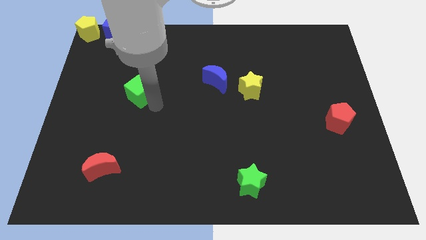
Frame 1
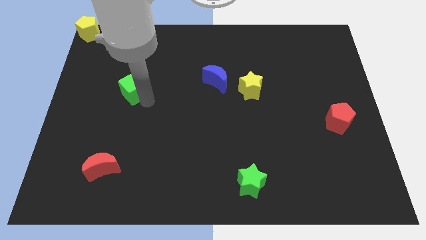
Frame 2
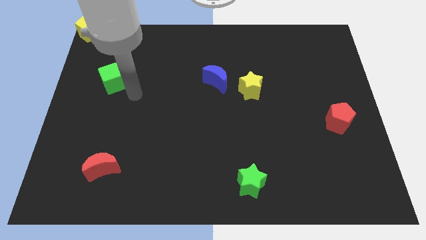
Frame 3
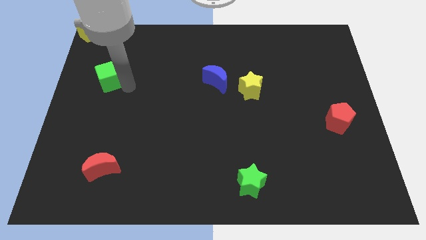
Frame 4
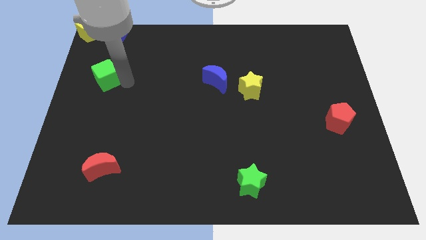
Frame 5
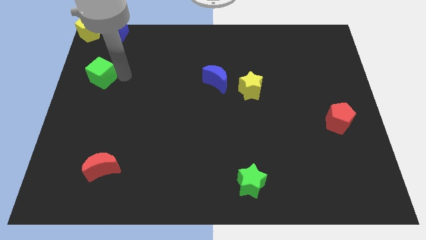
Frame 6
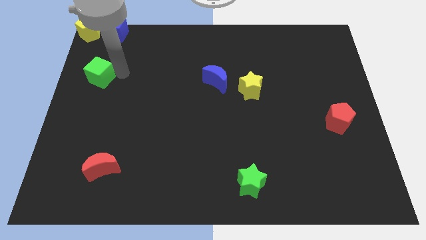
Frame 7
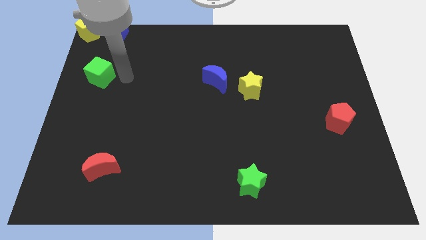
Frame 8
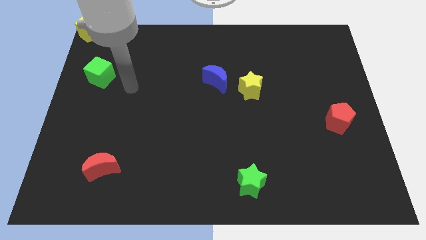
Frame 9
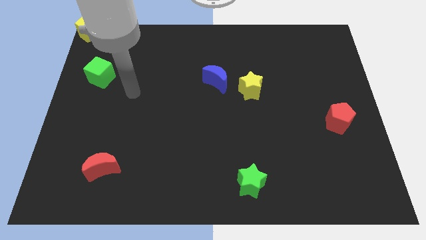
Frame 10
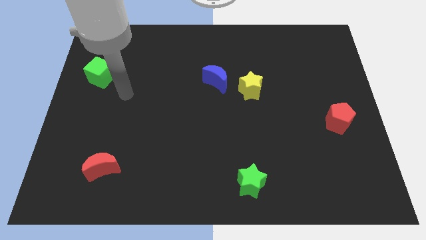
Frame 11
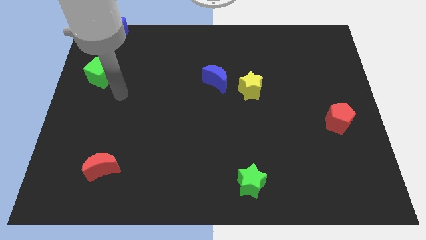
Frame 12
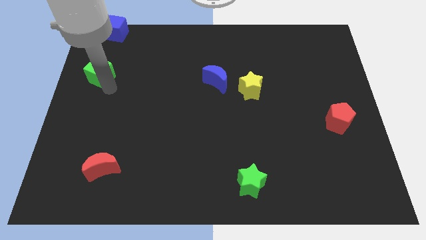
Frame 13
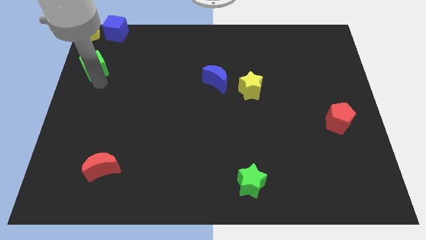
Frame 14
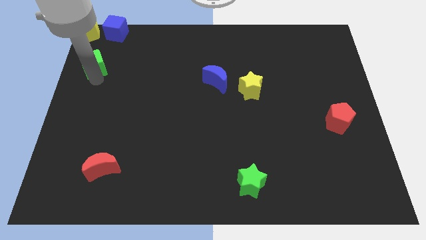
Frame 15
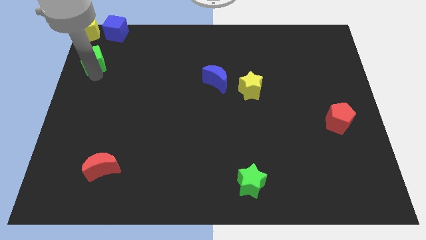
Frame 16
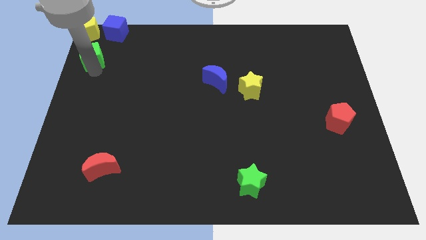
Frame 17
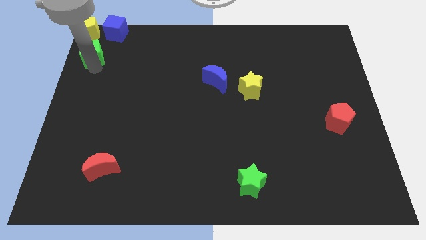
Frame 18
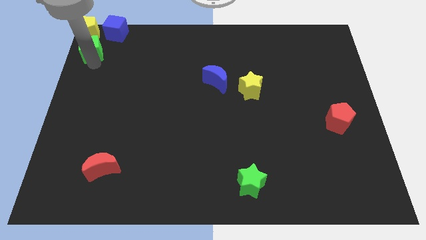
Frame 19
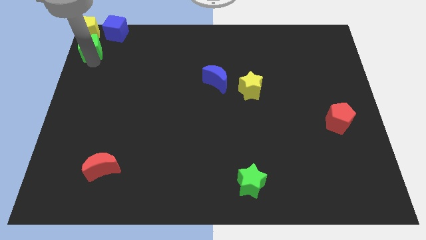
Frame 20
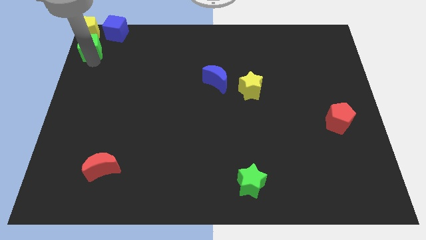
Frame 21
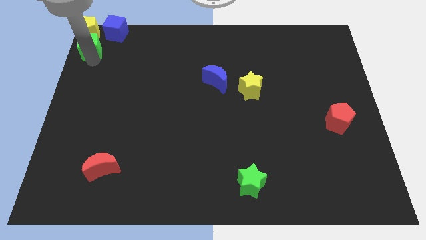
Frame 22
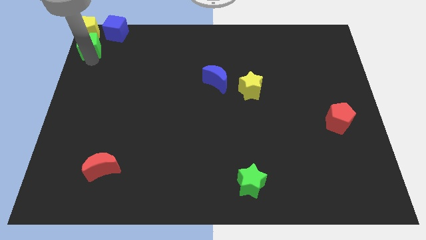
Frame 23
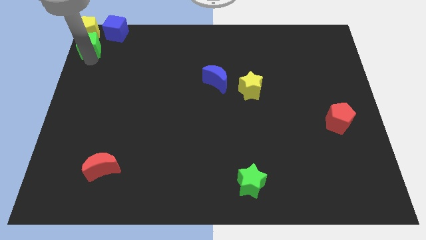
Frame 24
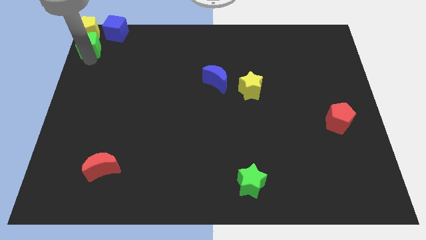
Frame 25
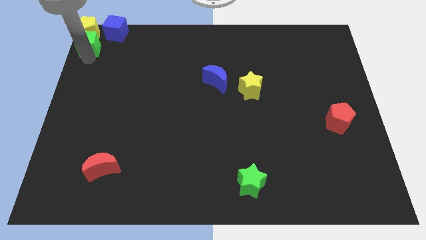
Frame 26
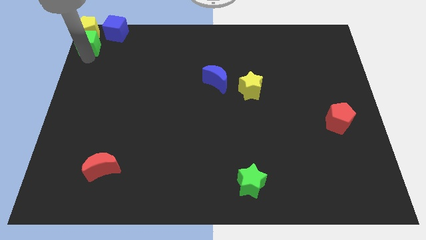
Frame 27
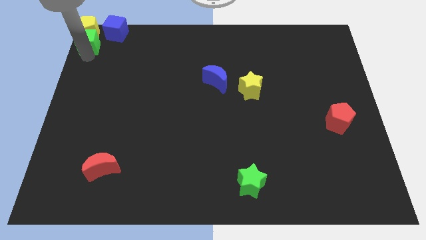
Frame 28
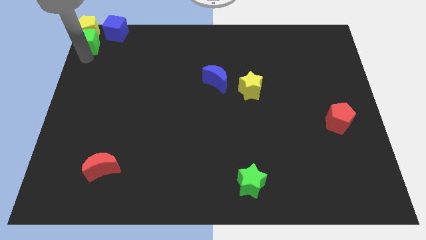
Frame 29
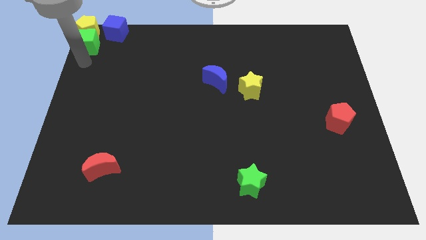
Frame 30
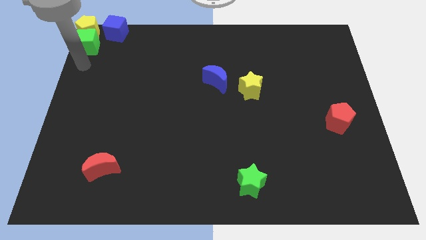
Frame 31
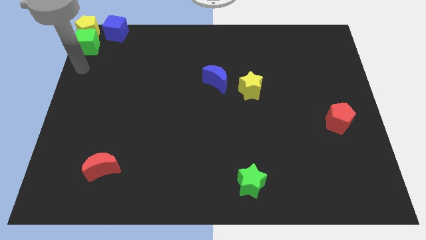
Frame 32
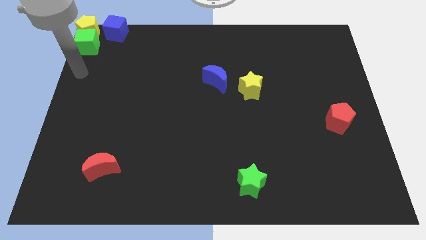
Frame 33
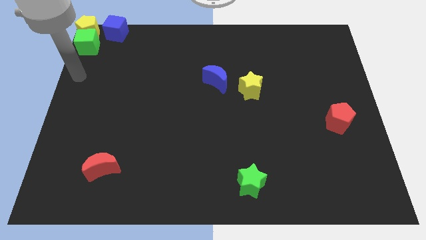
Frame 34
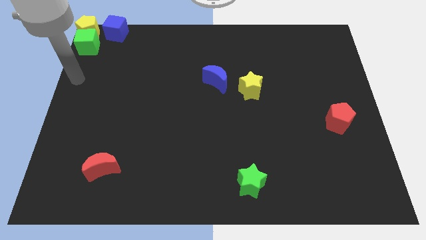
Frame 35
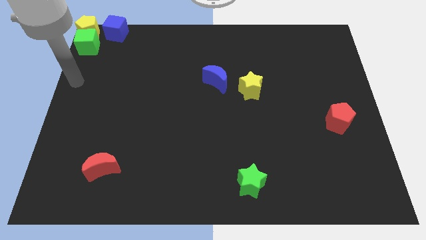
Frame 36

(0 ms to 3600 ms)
slide the green cube diagonally bottom left to the blue cube

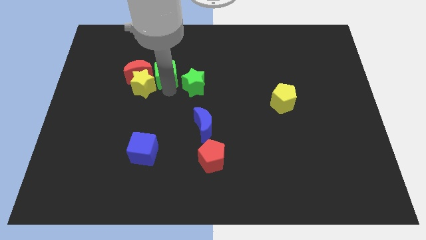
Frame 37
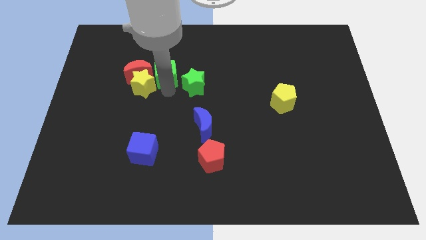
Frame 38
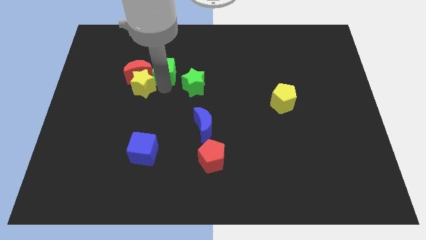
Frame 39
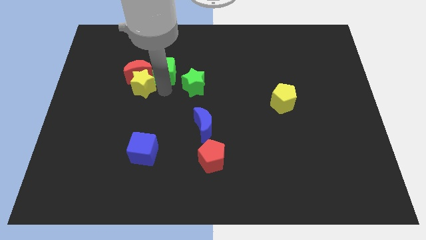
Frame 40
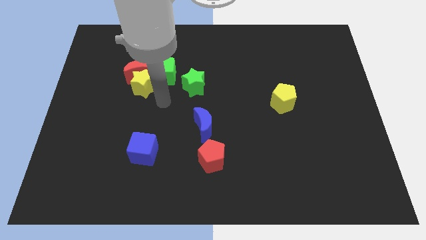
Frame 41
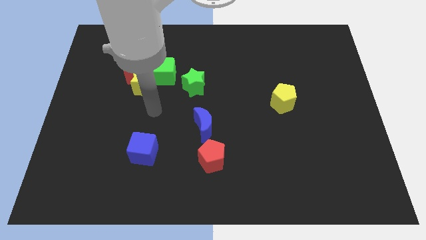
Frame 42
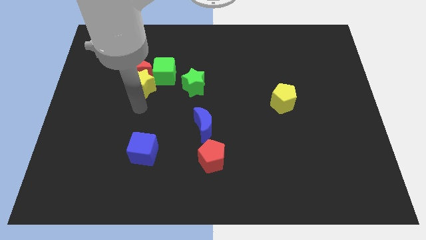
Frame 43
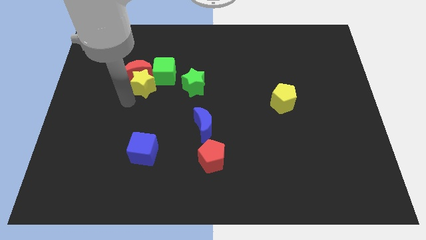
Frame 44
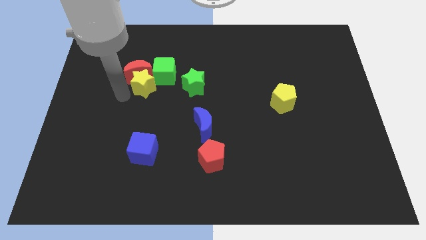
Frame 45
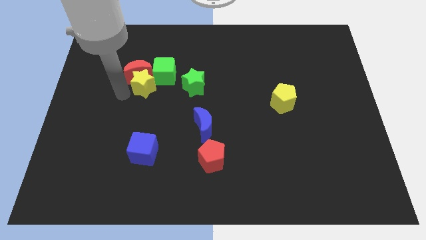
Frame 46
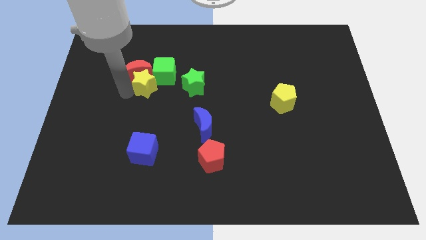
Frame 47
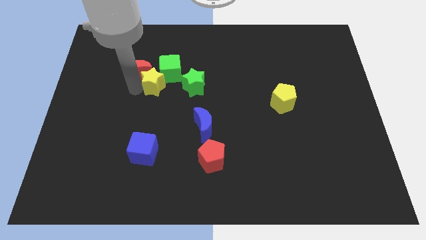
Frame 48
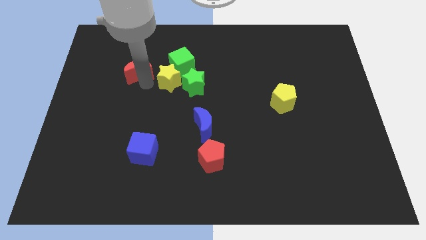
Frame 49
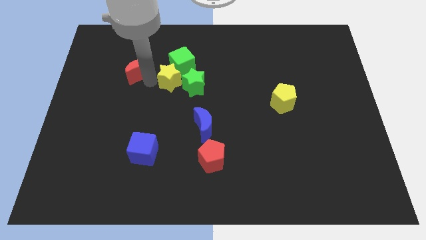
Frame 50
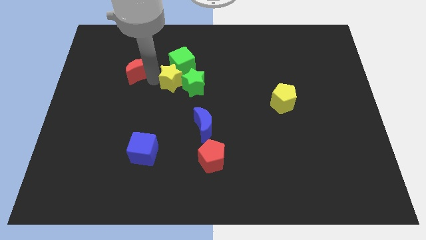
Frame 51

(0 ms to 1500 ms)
push the green cube with the yellow sta towards the top centre

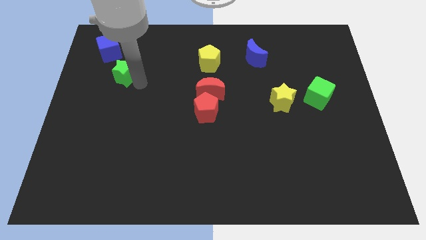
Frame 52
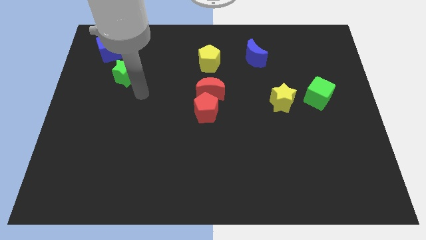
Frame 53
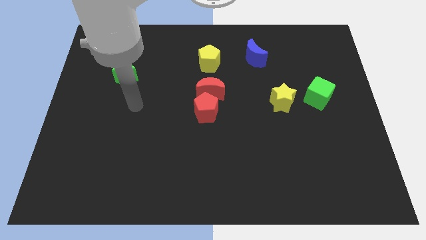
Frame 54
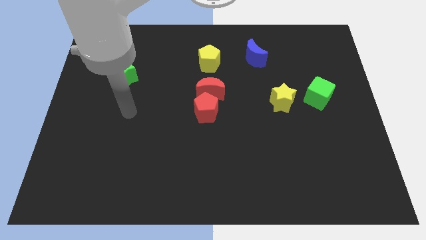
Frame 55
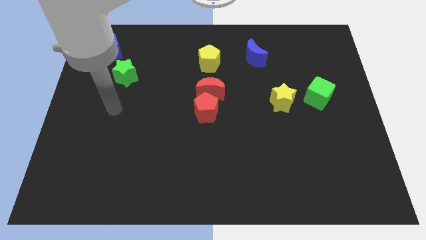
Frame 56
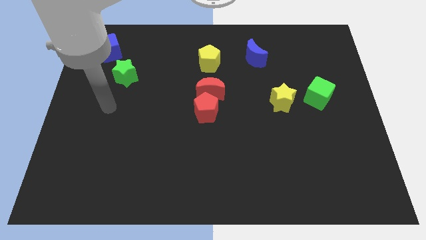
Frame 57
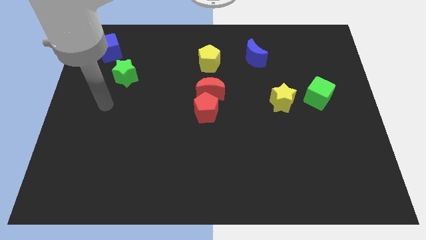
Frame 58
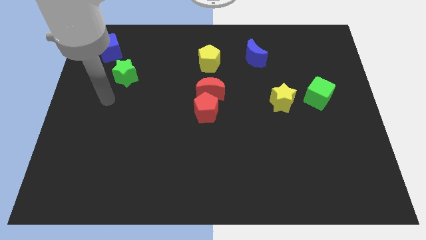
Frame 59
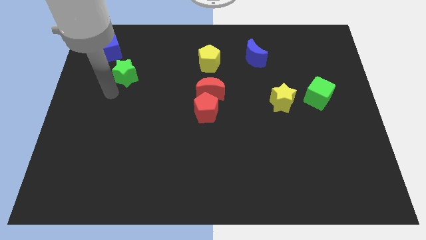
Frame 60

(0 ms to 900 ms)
place the arm left to the green star

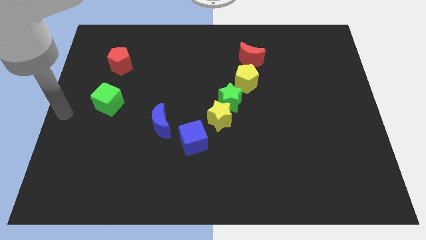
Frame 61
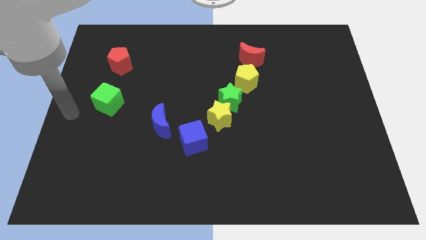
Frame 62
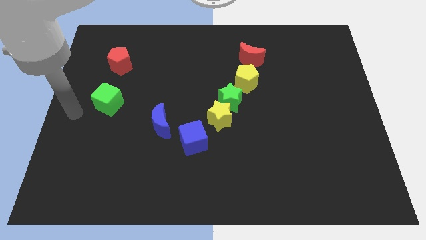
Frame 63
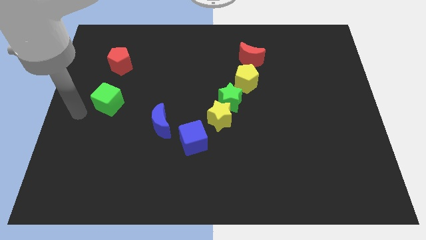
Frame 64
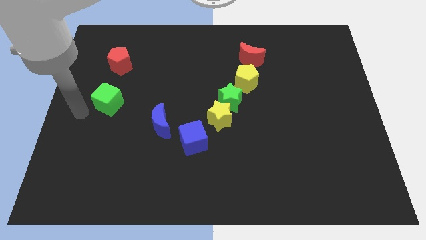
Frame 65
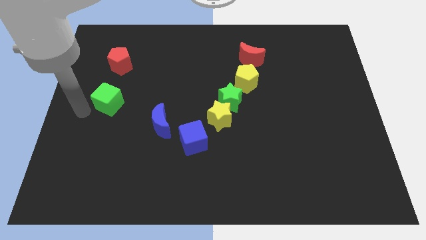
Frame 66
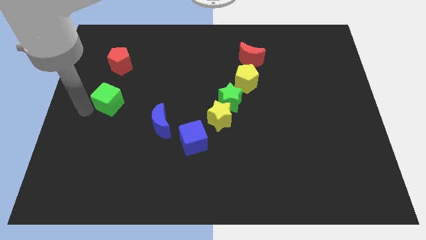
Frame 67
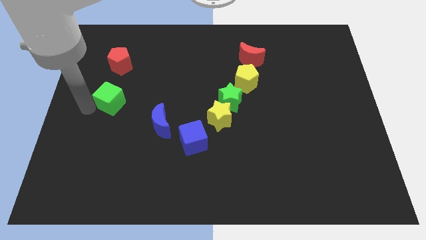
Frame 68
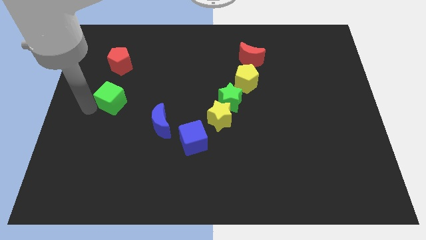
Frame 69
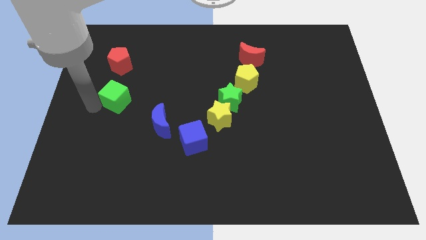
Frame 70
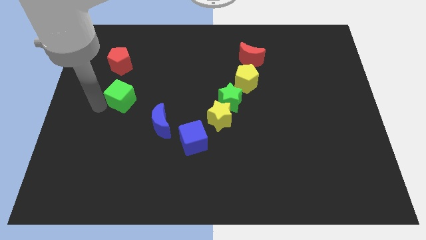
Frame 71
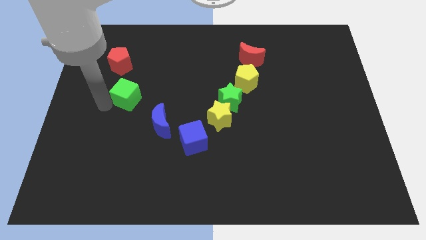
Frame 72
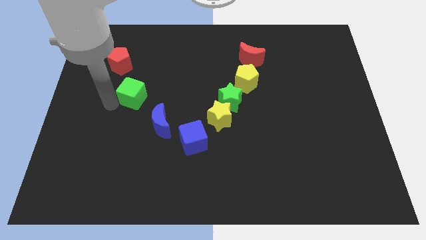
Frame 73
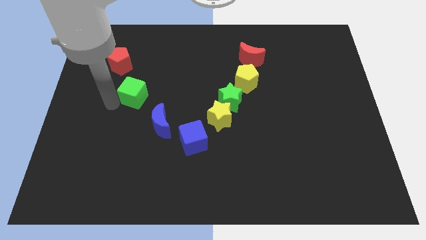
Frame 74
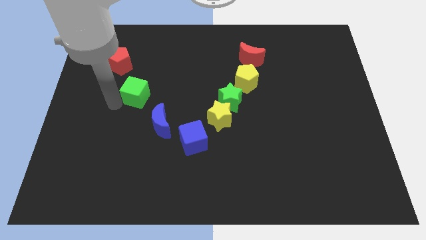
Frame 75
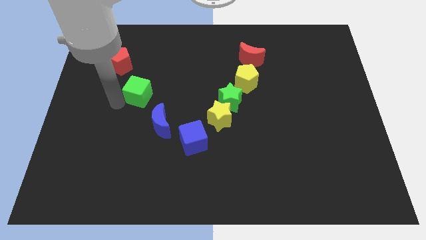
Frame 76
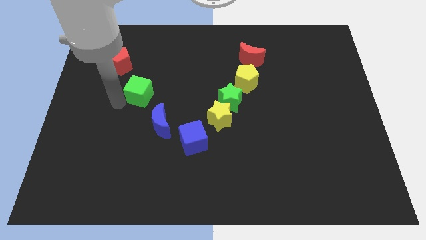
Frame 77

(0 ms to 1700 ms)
put the green cube in between the blue moon and red pentagon

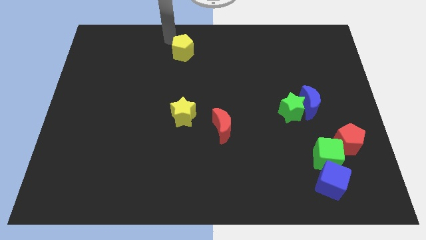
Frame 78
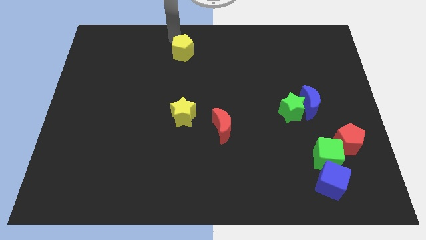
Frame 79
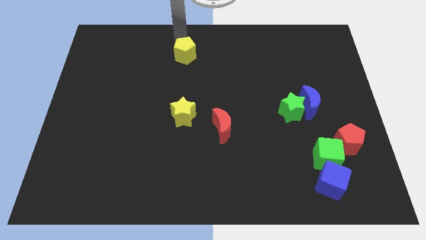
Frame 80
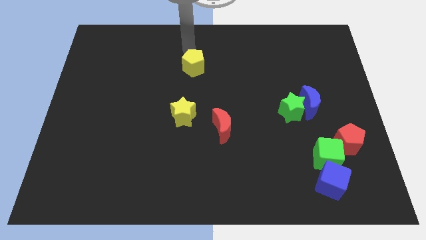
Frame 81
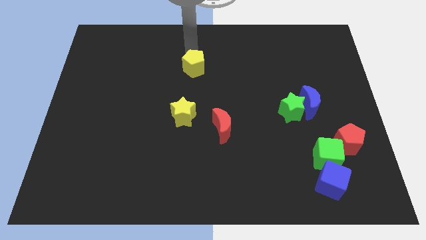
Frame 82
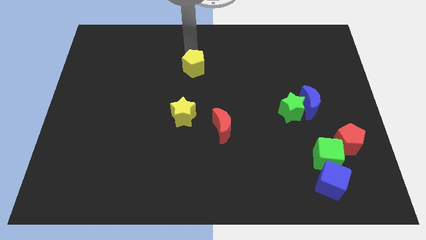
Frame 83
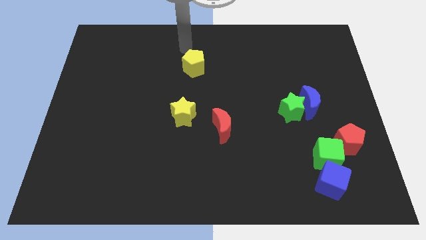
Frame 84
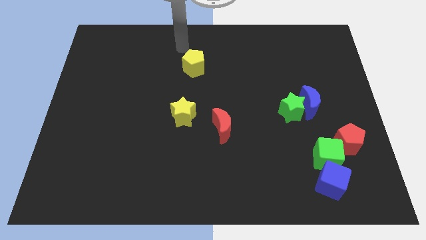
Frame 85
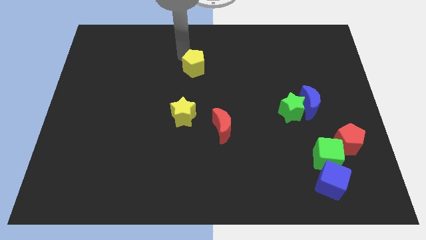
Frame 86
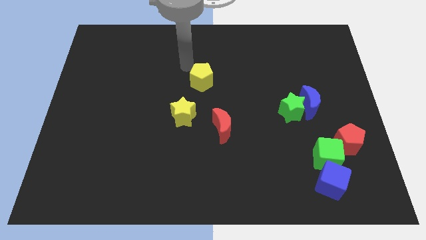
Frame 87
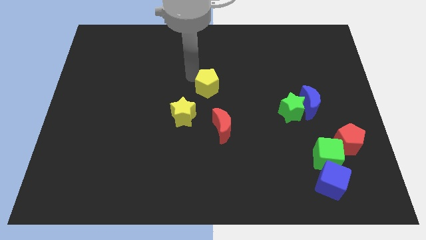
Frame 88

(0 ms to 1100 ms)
move the yellow pentagon to the center of the board

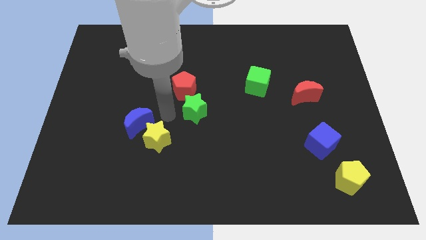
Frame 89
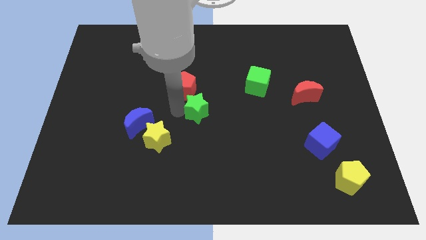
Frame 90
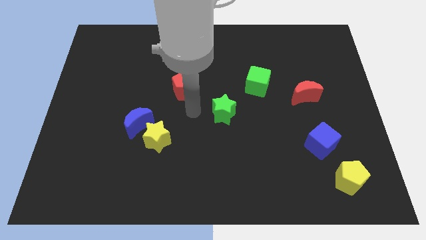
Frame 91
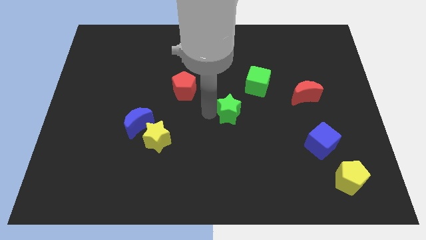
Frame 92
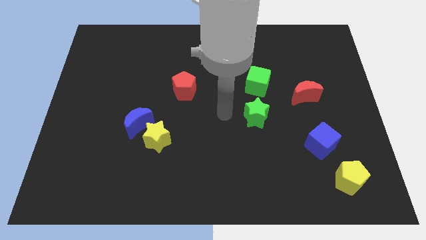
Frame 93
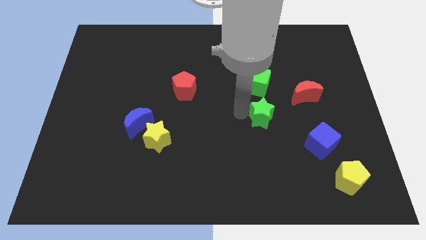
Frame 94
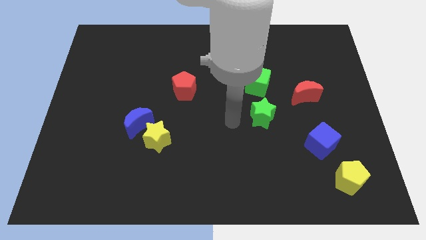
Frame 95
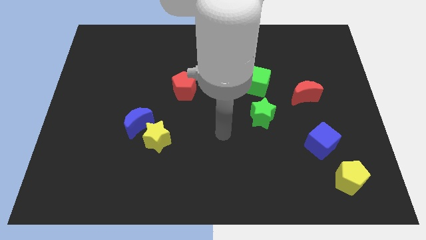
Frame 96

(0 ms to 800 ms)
put the green star at the bottom of green cube
